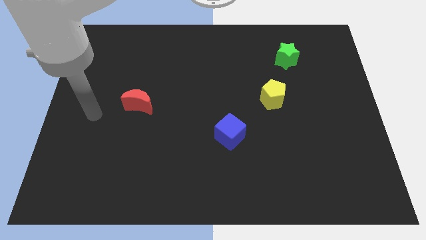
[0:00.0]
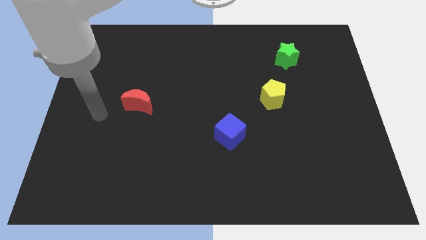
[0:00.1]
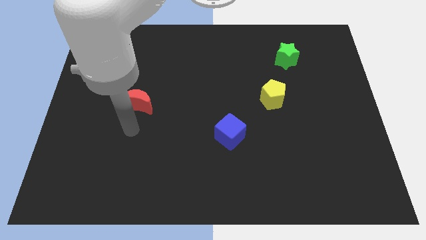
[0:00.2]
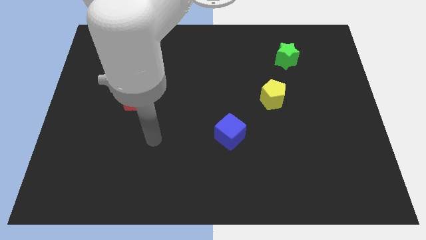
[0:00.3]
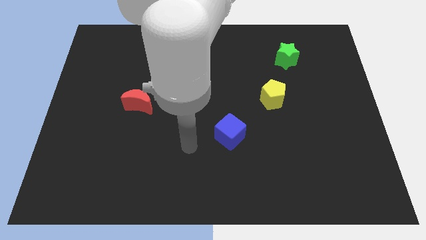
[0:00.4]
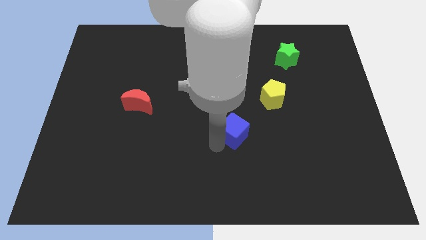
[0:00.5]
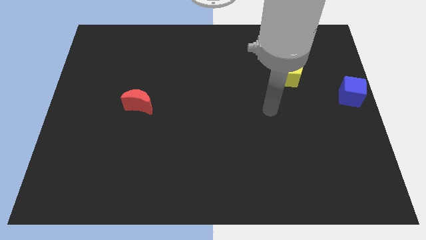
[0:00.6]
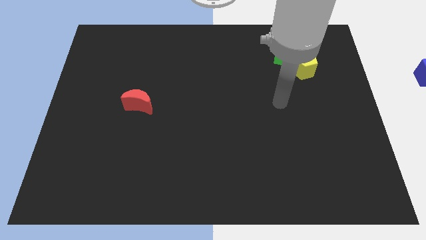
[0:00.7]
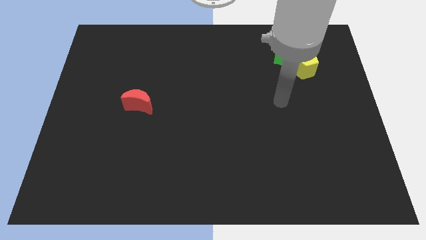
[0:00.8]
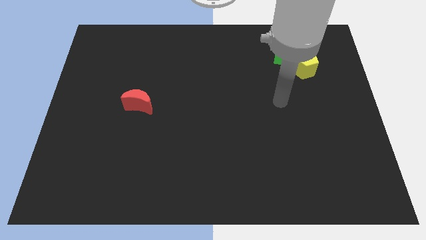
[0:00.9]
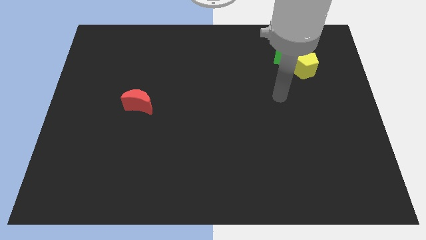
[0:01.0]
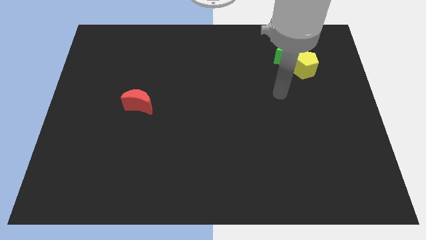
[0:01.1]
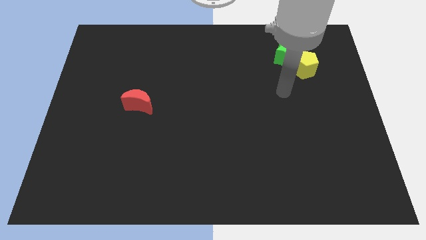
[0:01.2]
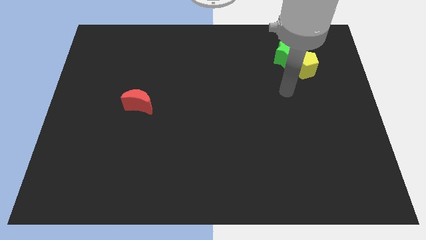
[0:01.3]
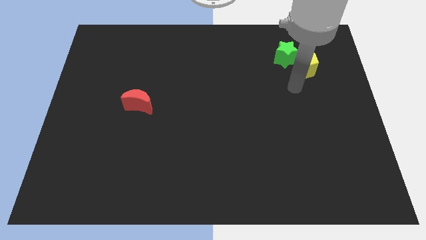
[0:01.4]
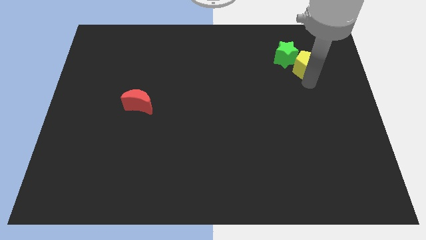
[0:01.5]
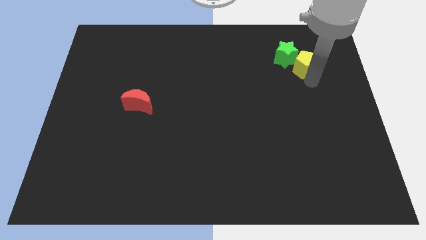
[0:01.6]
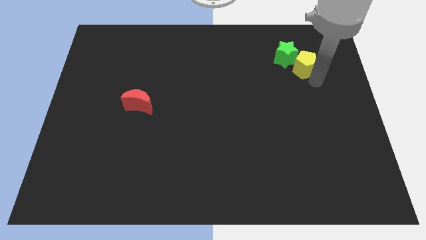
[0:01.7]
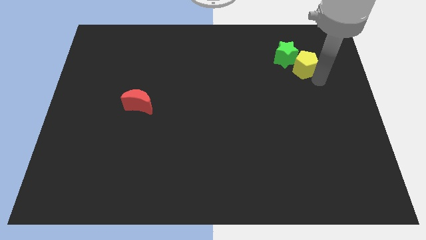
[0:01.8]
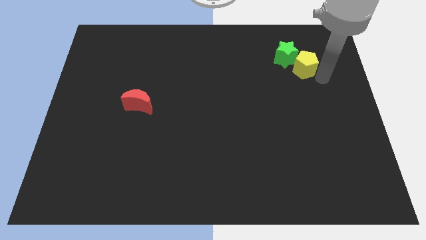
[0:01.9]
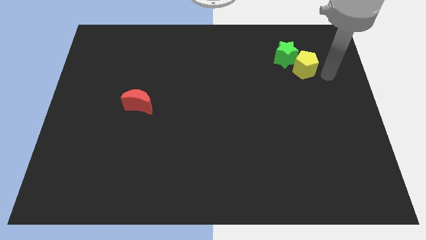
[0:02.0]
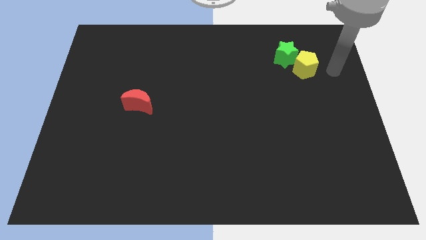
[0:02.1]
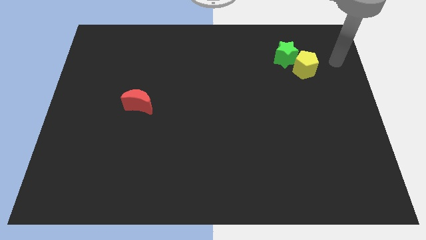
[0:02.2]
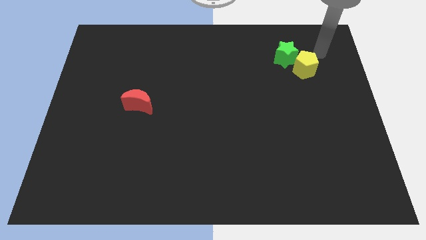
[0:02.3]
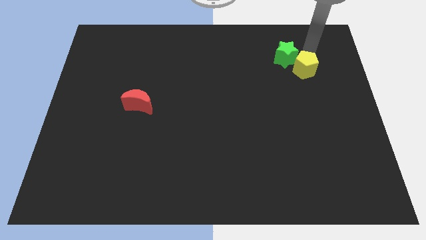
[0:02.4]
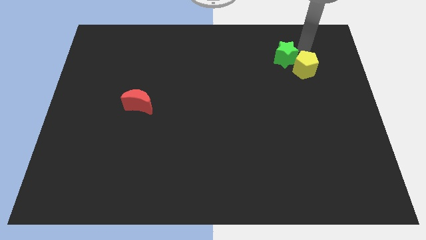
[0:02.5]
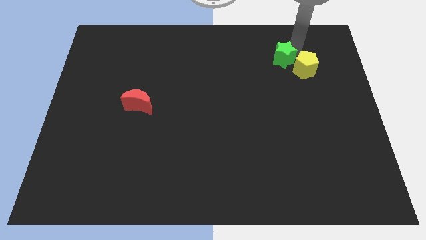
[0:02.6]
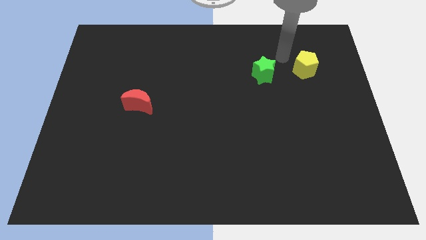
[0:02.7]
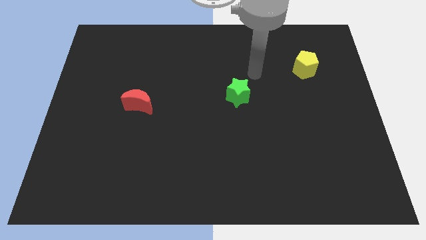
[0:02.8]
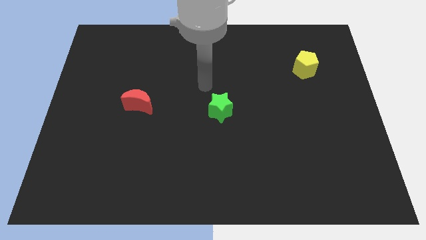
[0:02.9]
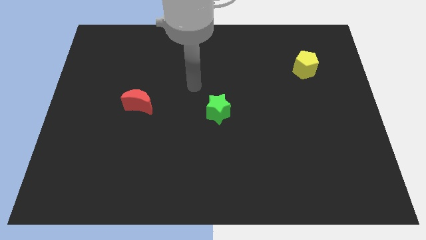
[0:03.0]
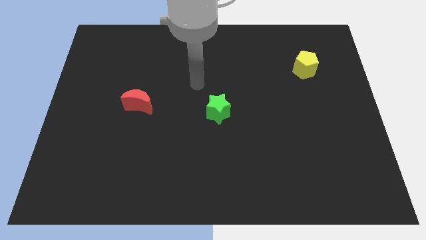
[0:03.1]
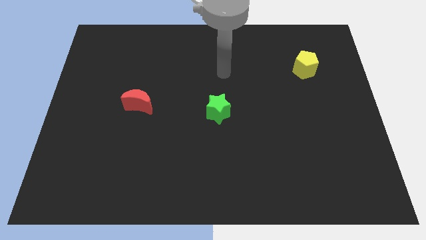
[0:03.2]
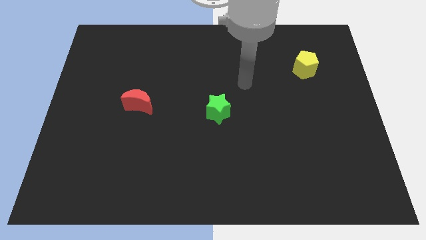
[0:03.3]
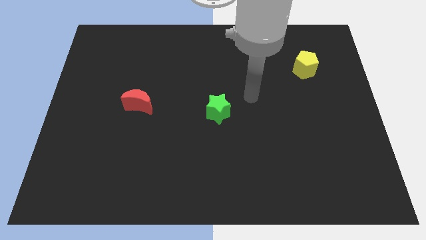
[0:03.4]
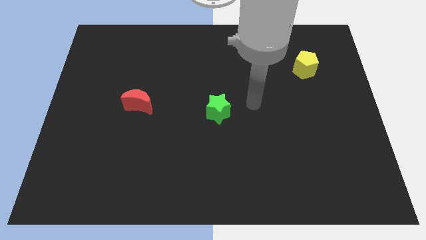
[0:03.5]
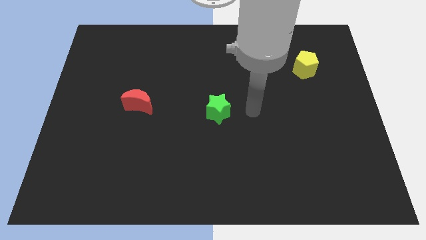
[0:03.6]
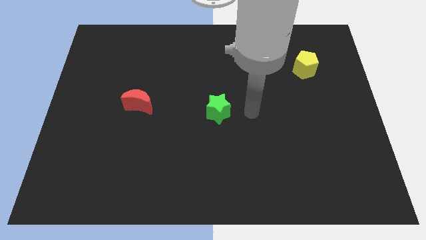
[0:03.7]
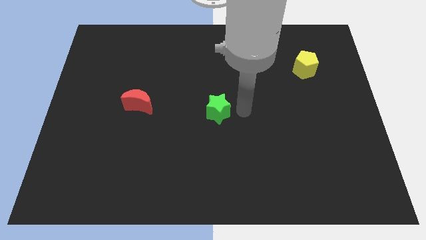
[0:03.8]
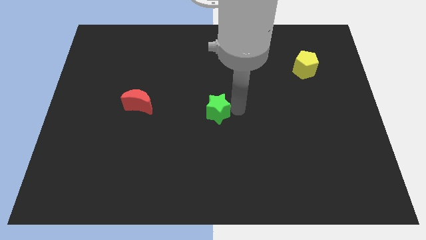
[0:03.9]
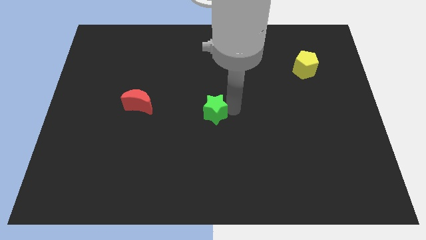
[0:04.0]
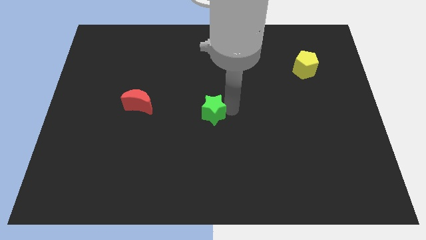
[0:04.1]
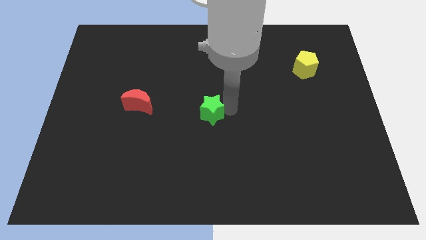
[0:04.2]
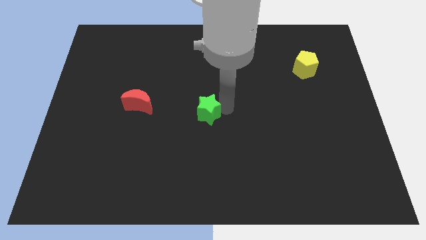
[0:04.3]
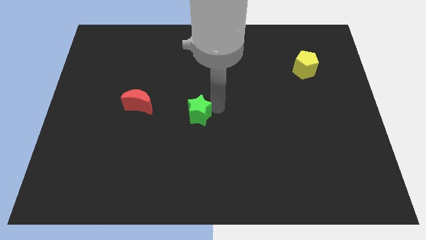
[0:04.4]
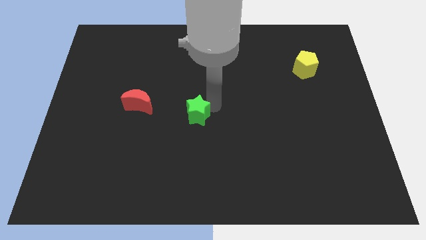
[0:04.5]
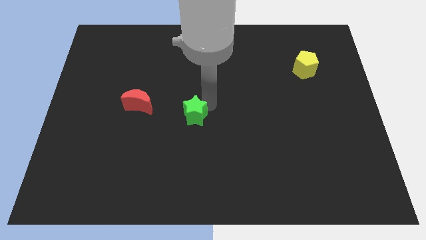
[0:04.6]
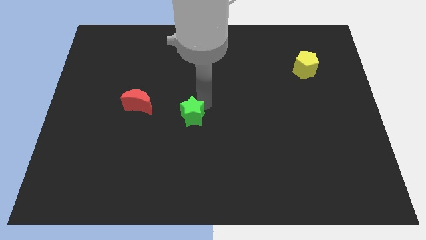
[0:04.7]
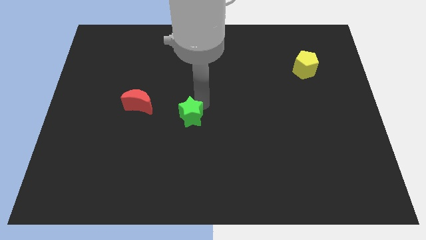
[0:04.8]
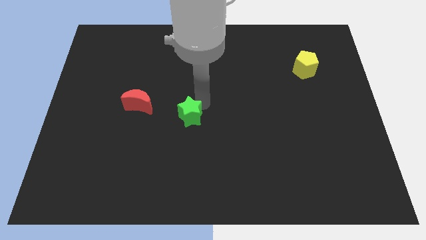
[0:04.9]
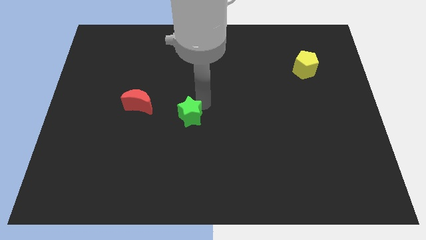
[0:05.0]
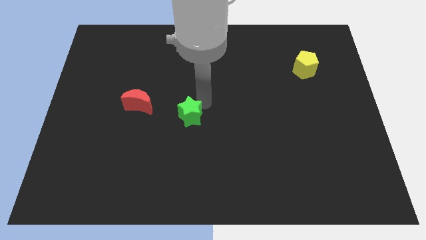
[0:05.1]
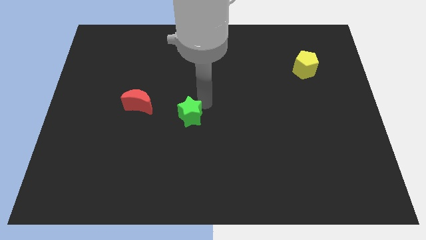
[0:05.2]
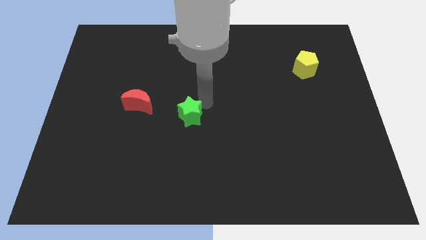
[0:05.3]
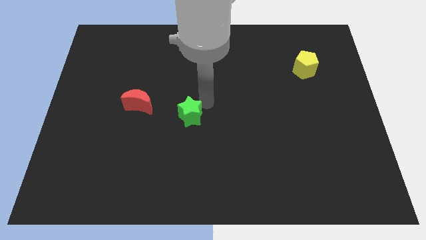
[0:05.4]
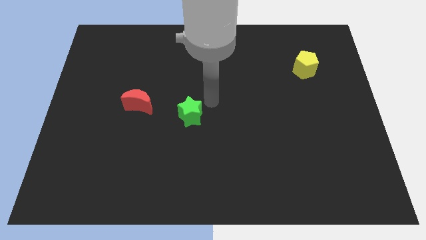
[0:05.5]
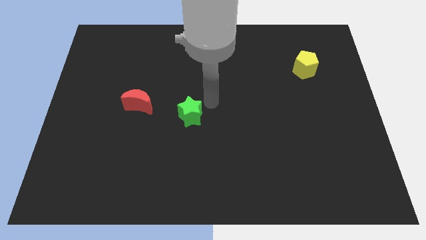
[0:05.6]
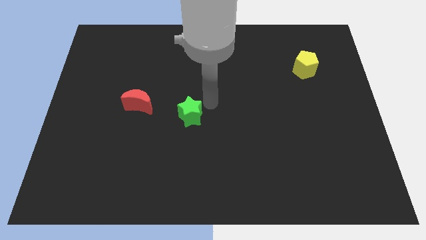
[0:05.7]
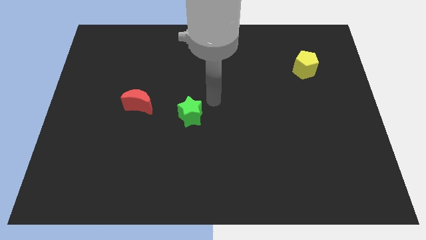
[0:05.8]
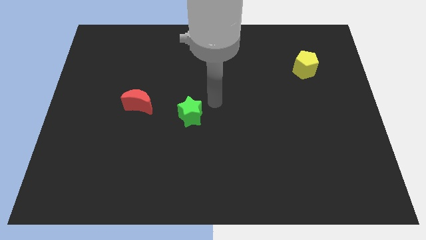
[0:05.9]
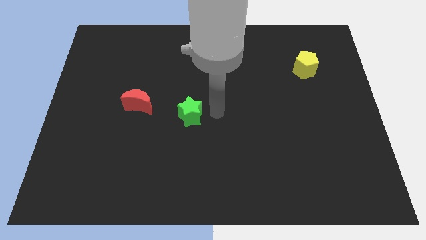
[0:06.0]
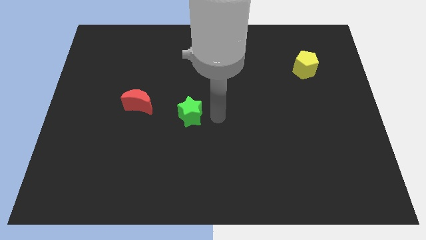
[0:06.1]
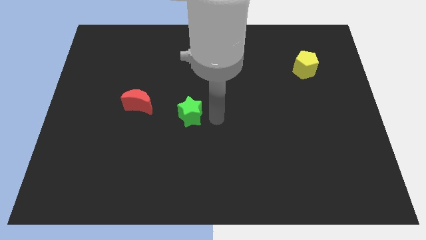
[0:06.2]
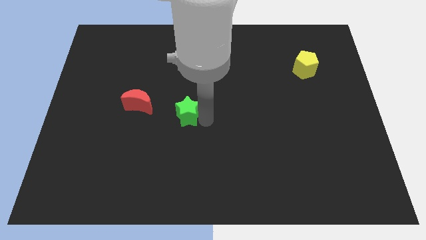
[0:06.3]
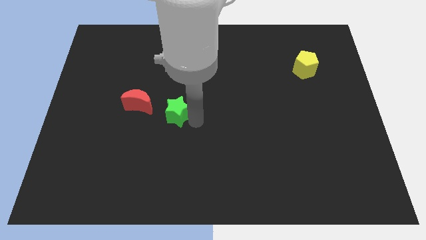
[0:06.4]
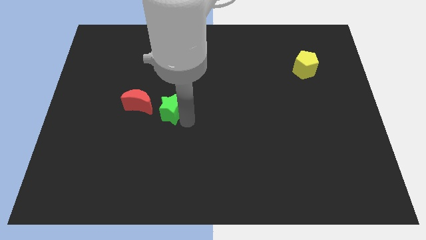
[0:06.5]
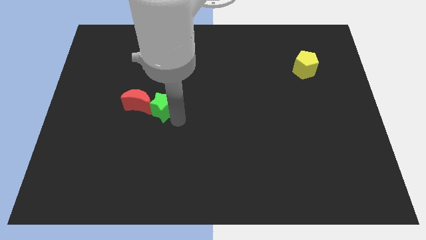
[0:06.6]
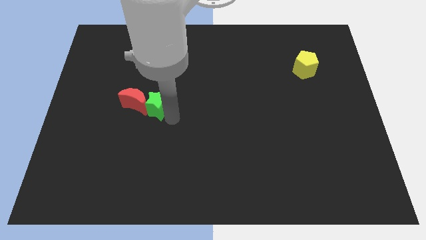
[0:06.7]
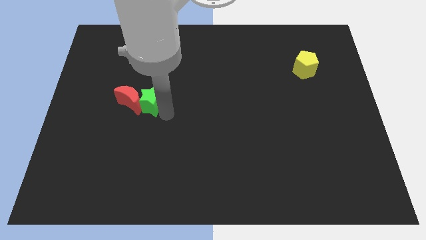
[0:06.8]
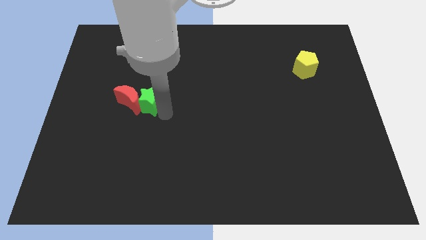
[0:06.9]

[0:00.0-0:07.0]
move the green star close to the red moon

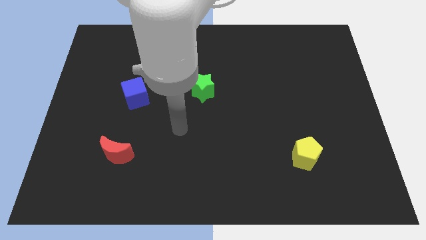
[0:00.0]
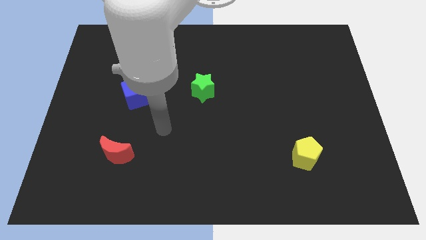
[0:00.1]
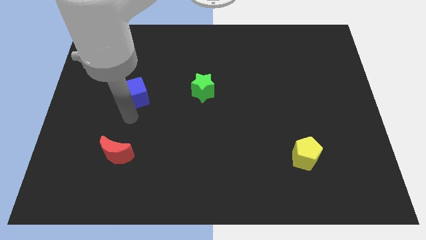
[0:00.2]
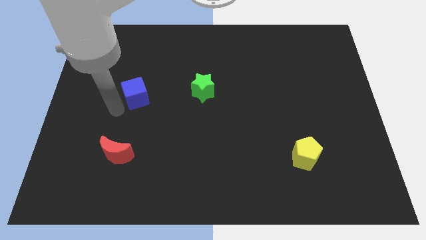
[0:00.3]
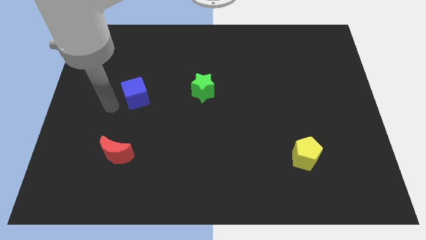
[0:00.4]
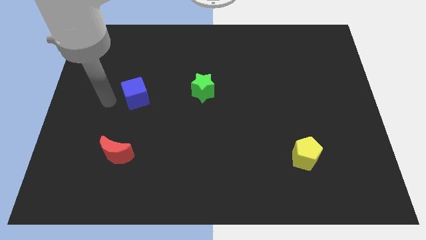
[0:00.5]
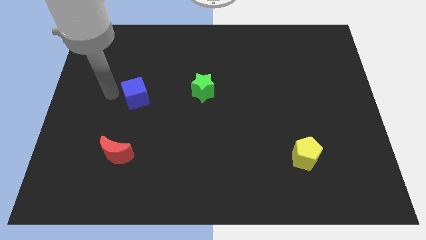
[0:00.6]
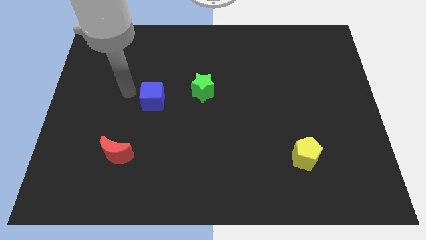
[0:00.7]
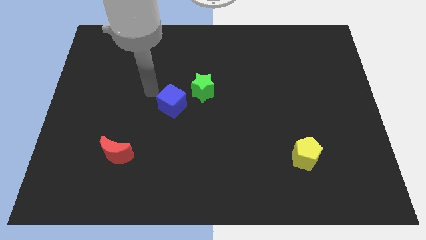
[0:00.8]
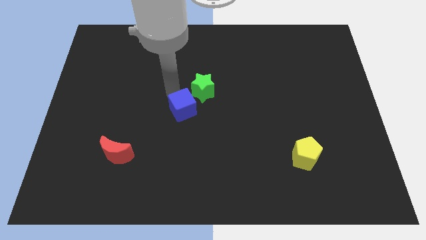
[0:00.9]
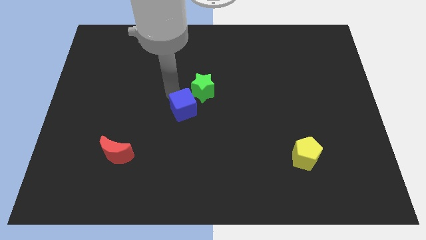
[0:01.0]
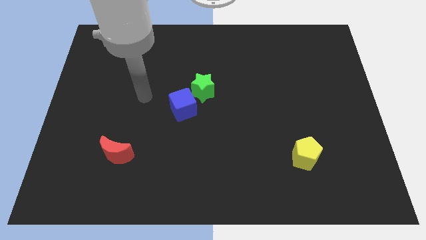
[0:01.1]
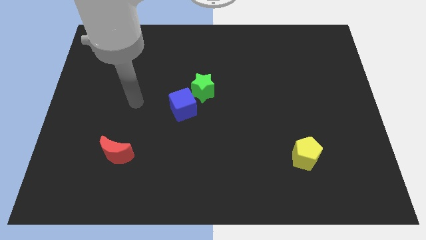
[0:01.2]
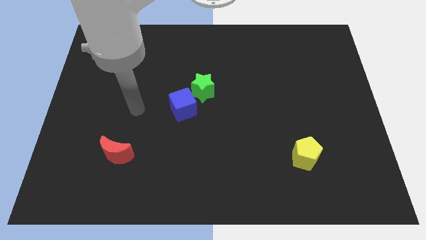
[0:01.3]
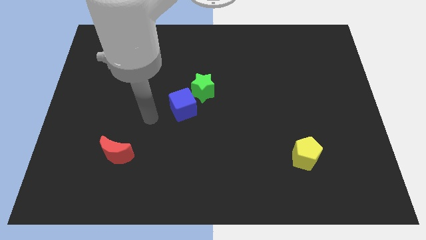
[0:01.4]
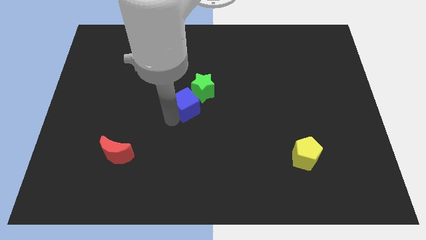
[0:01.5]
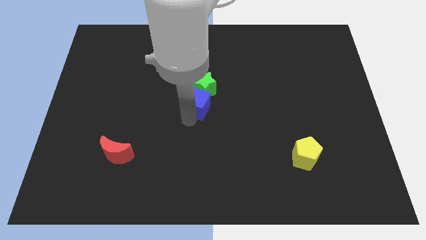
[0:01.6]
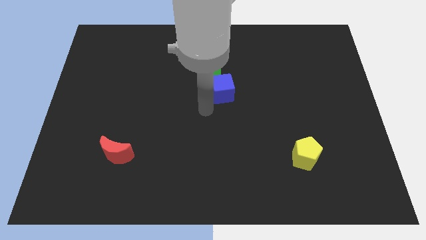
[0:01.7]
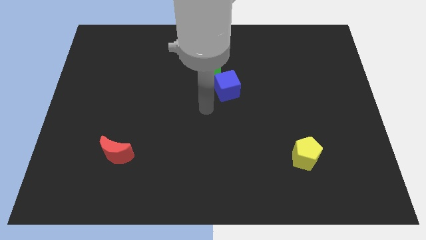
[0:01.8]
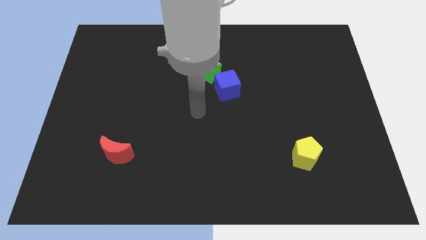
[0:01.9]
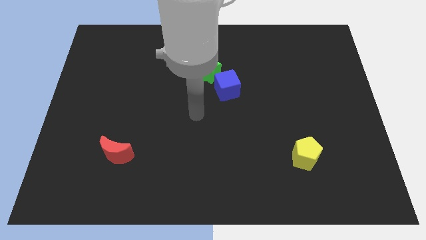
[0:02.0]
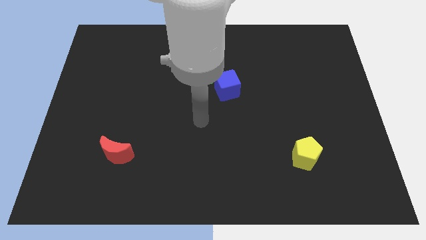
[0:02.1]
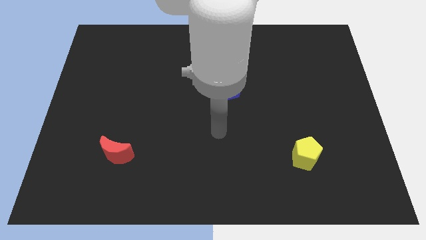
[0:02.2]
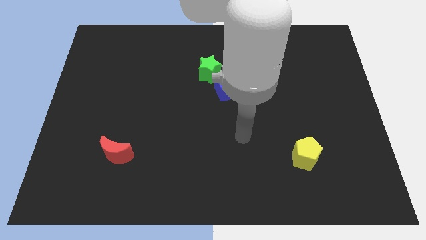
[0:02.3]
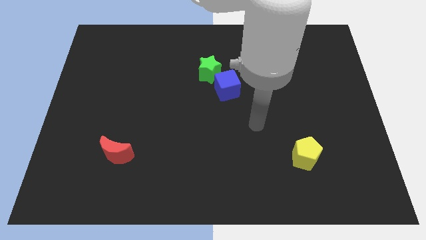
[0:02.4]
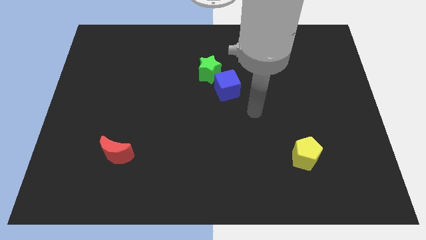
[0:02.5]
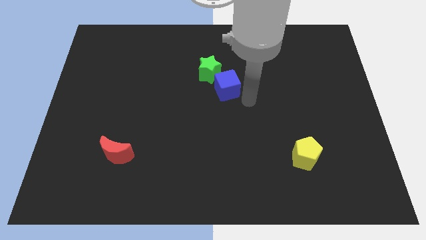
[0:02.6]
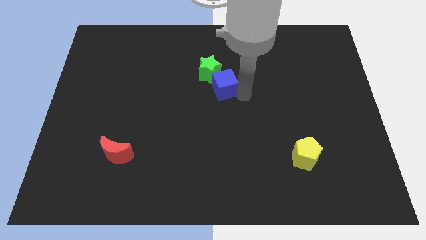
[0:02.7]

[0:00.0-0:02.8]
put the blue cube next to the green block
